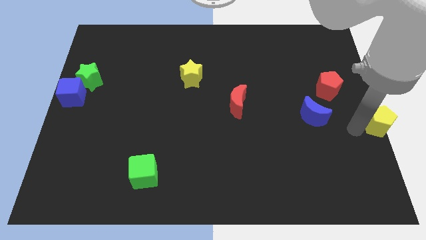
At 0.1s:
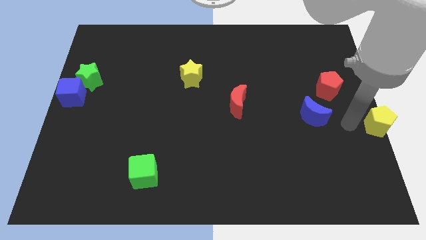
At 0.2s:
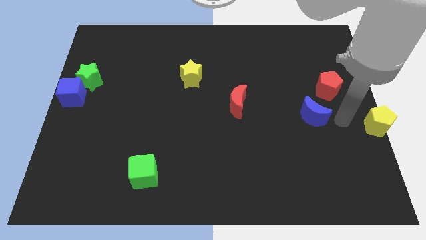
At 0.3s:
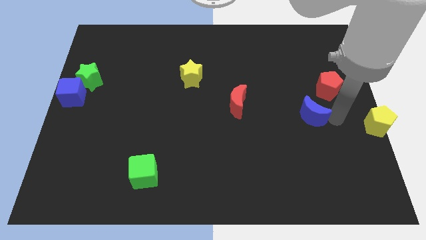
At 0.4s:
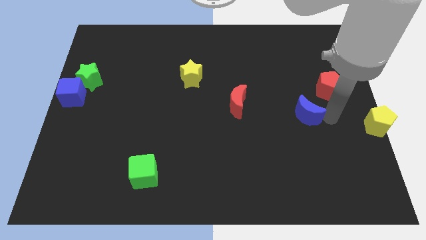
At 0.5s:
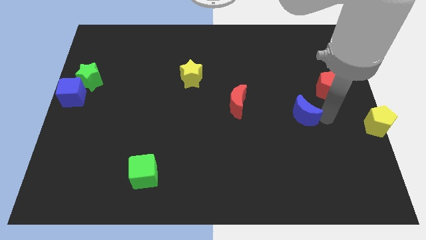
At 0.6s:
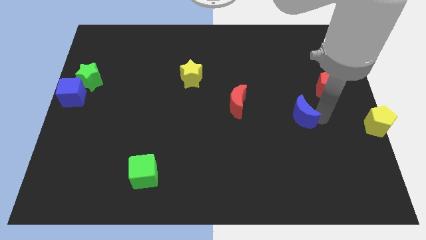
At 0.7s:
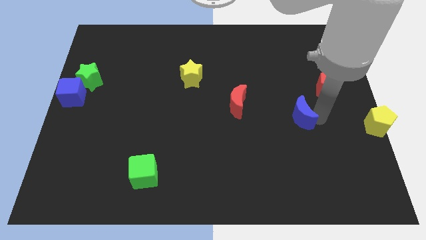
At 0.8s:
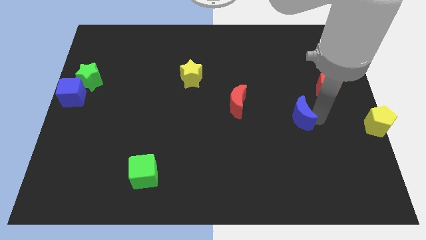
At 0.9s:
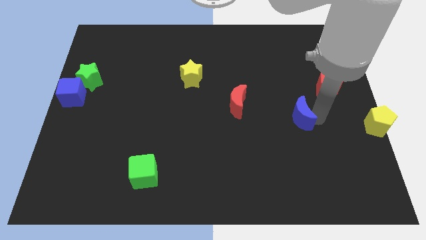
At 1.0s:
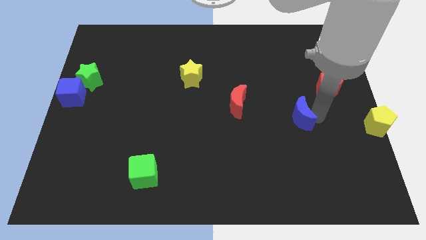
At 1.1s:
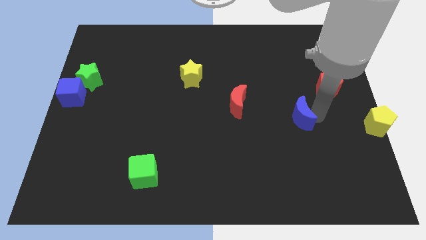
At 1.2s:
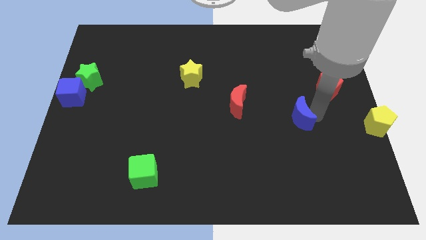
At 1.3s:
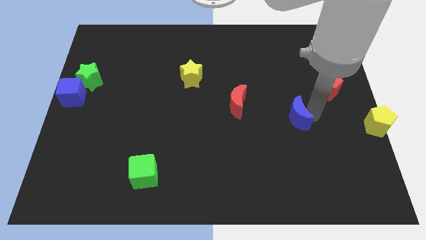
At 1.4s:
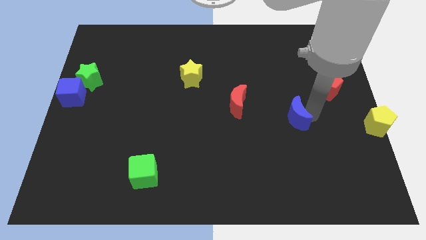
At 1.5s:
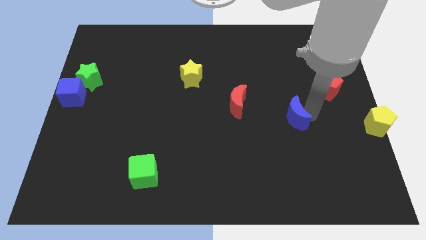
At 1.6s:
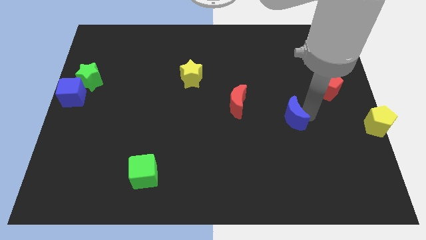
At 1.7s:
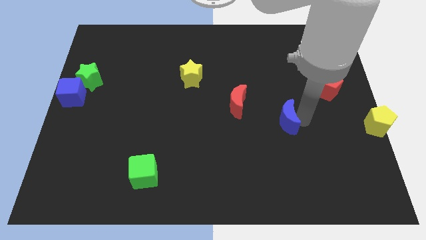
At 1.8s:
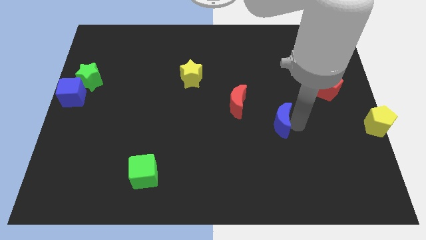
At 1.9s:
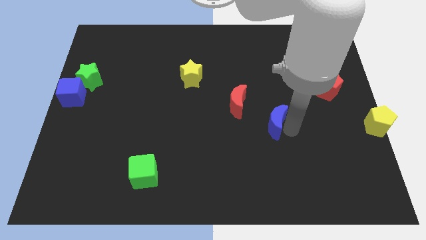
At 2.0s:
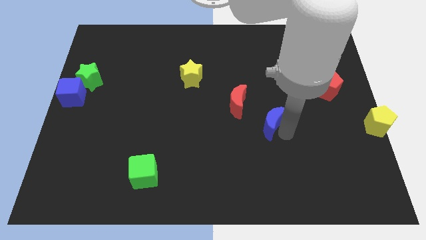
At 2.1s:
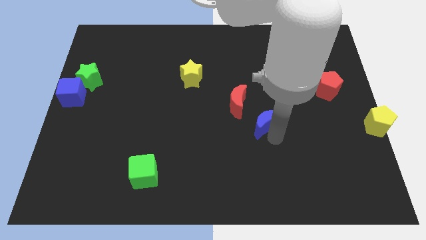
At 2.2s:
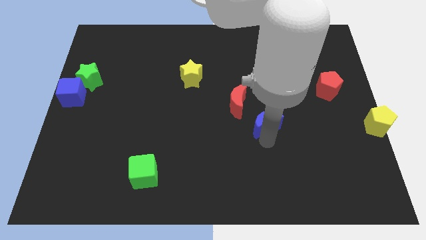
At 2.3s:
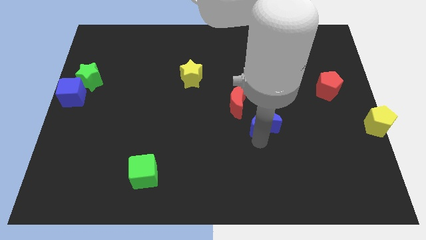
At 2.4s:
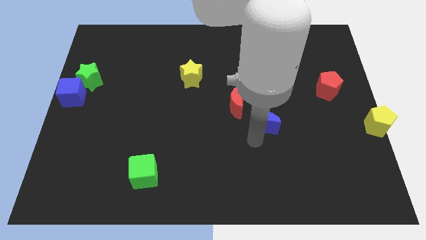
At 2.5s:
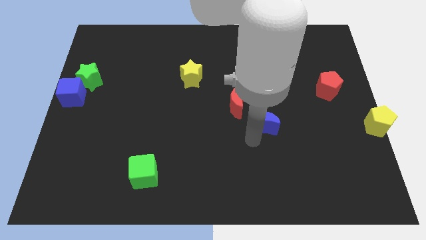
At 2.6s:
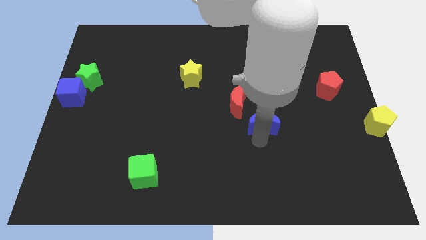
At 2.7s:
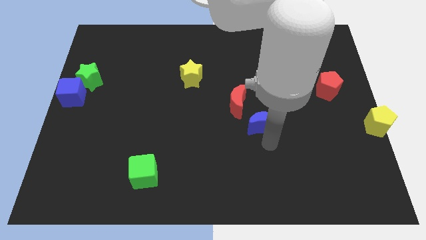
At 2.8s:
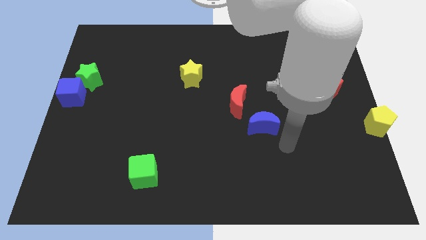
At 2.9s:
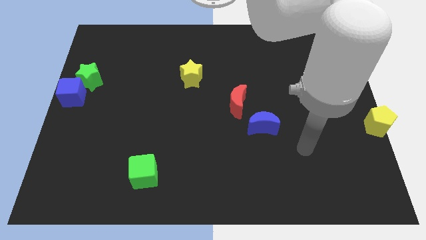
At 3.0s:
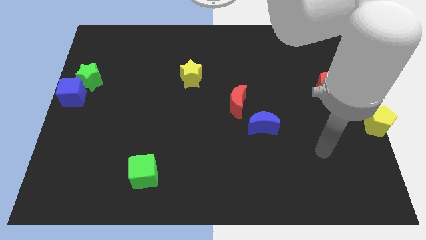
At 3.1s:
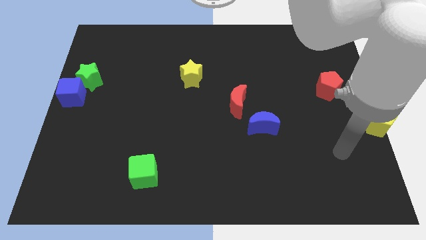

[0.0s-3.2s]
place the blue moon to the right side of the board

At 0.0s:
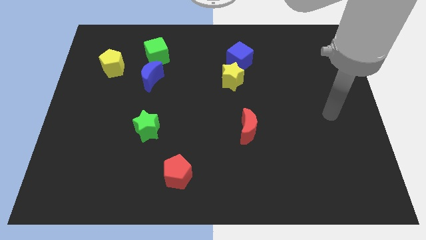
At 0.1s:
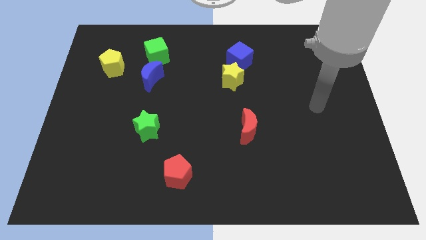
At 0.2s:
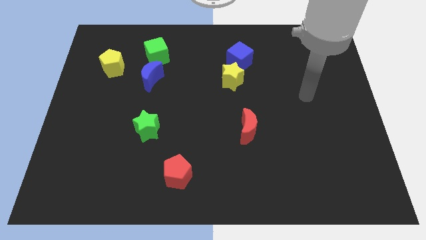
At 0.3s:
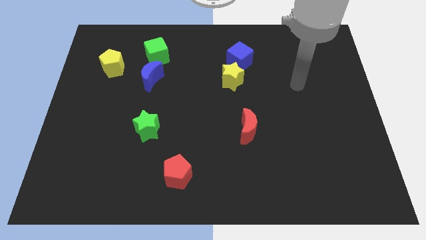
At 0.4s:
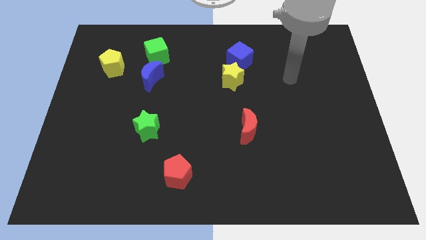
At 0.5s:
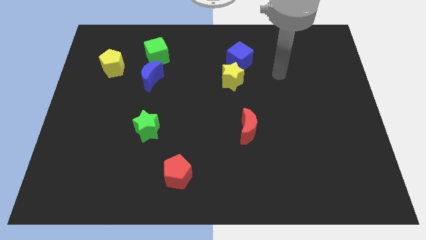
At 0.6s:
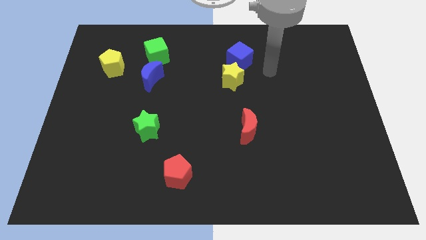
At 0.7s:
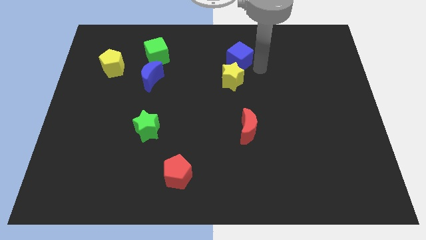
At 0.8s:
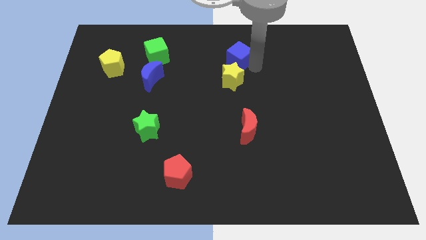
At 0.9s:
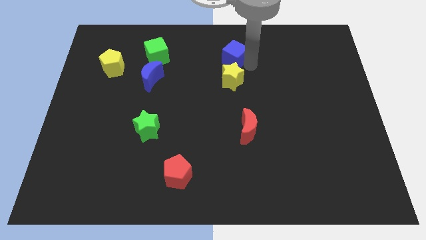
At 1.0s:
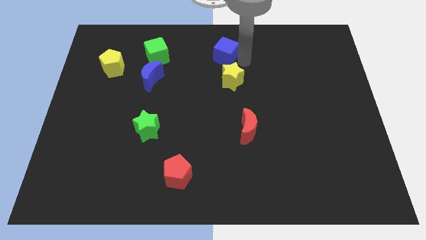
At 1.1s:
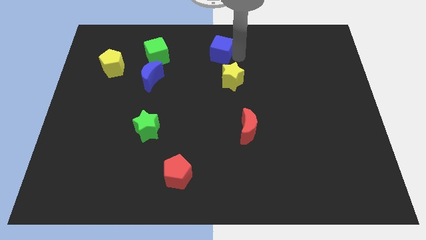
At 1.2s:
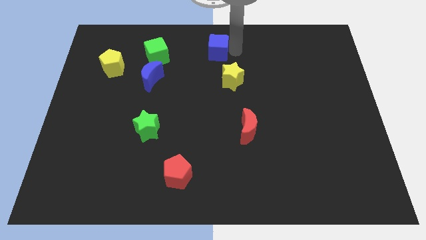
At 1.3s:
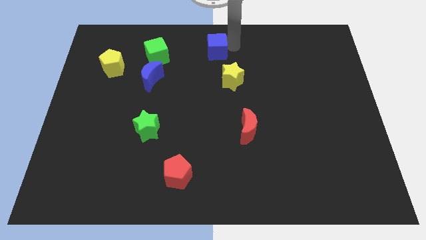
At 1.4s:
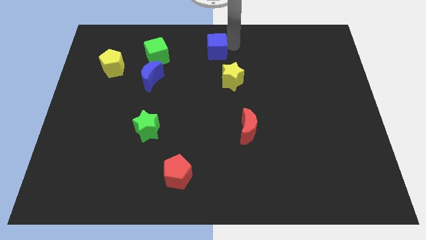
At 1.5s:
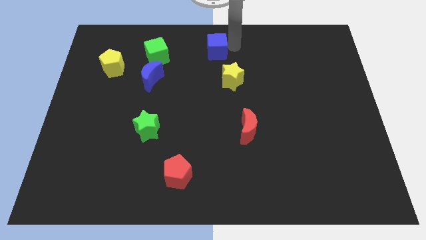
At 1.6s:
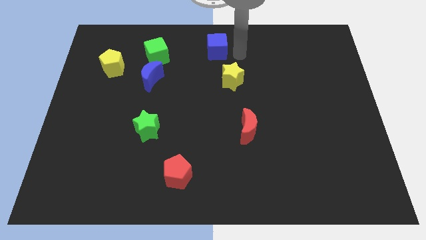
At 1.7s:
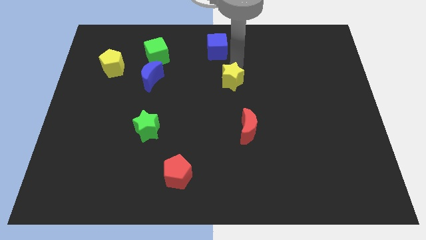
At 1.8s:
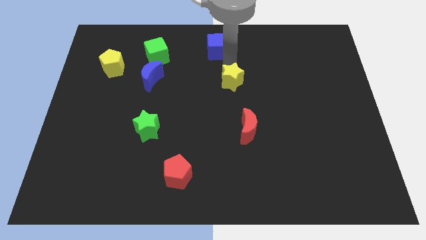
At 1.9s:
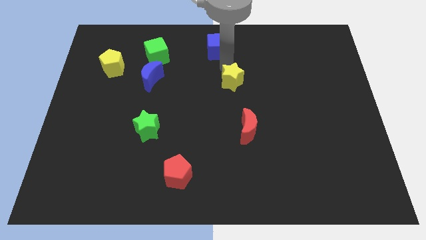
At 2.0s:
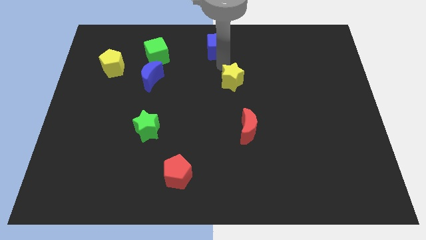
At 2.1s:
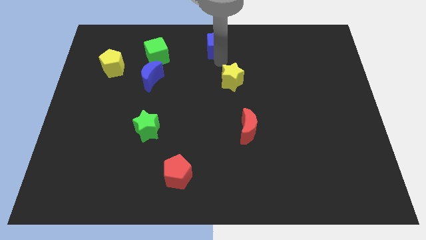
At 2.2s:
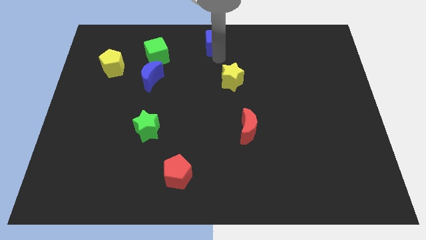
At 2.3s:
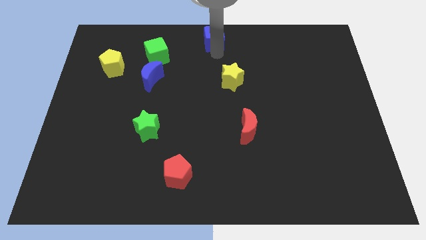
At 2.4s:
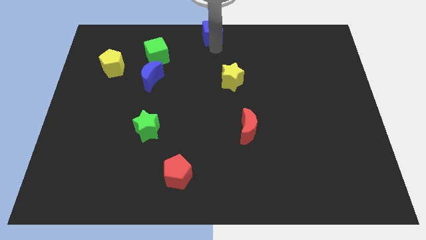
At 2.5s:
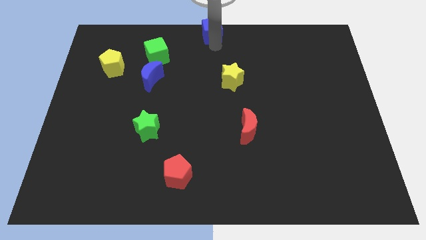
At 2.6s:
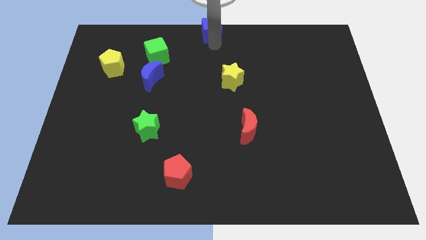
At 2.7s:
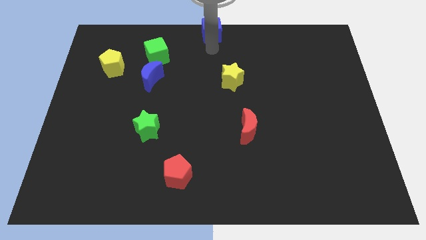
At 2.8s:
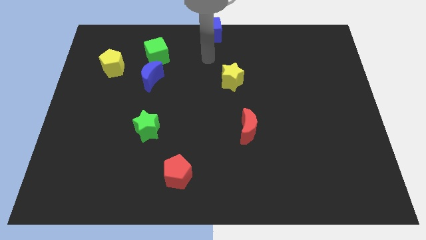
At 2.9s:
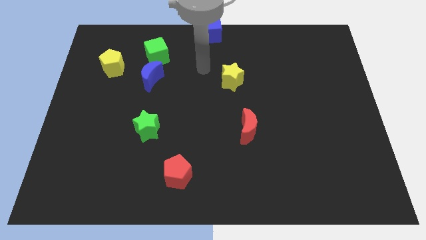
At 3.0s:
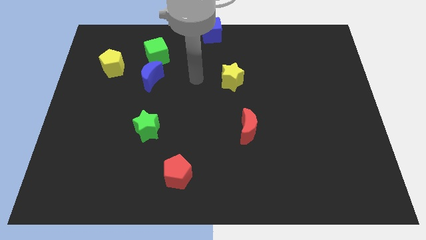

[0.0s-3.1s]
move the blue cube to the middle of the top side of the board

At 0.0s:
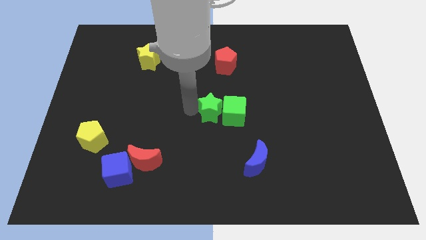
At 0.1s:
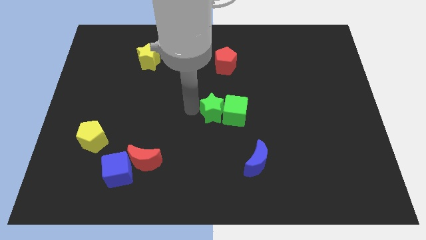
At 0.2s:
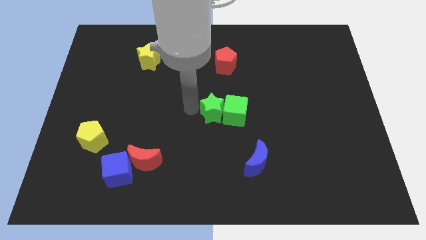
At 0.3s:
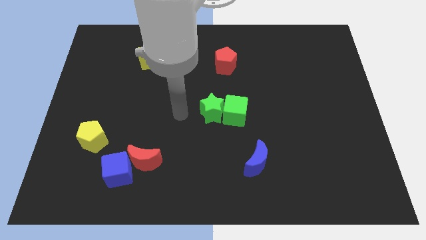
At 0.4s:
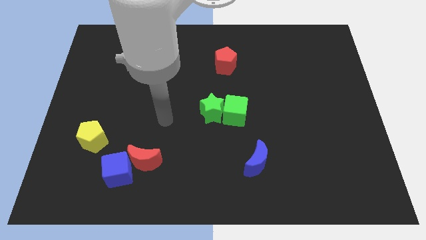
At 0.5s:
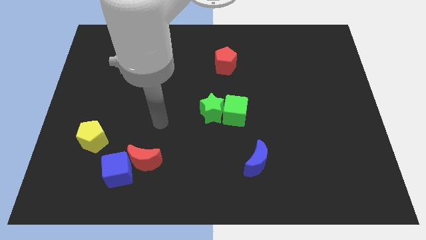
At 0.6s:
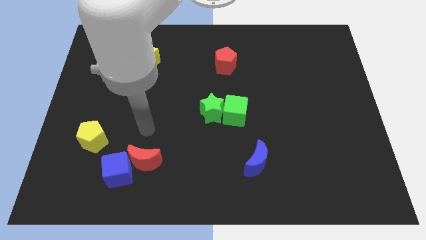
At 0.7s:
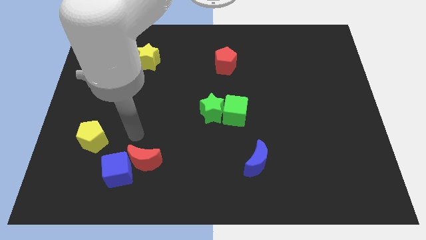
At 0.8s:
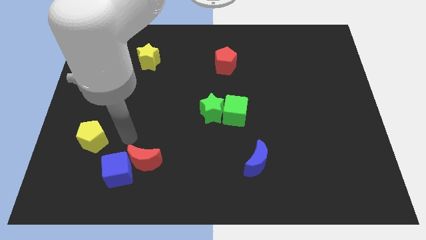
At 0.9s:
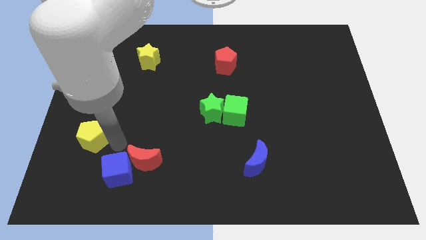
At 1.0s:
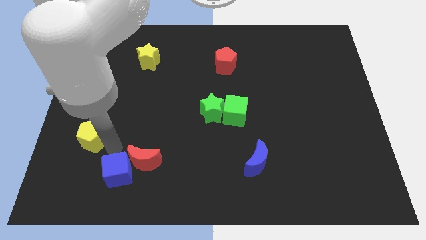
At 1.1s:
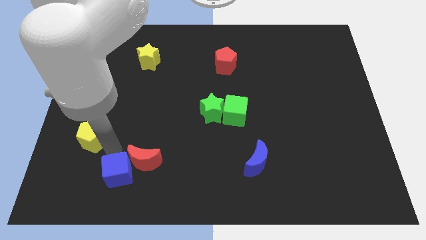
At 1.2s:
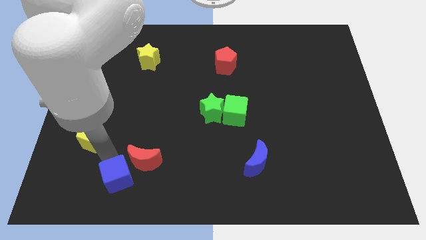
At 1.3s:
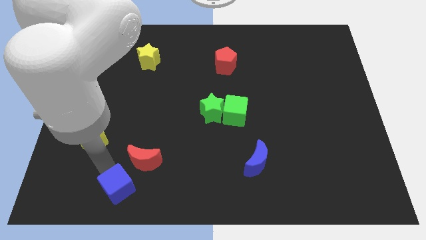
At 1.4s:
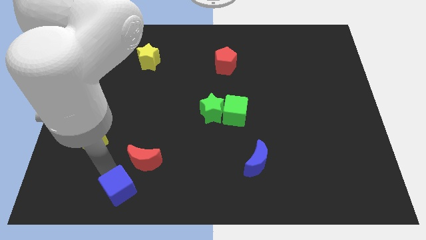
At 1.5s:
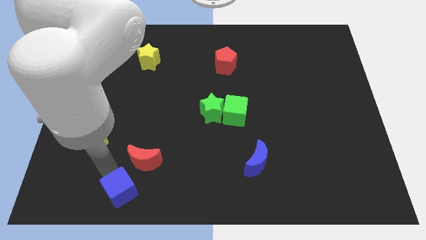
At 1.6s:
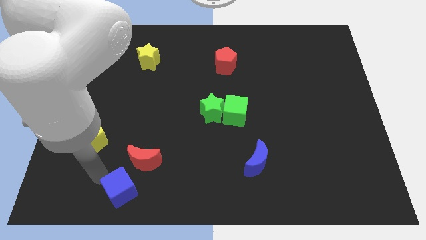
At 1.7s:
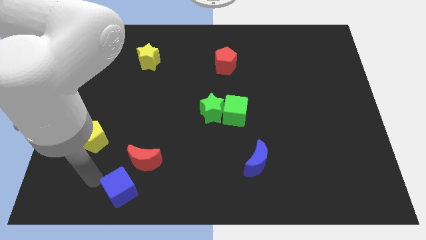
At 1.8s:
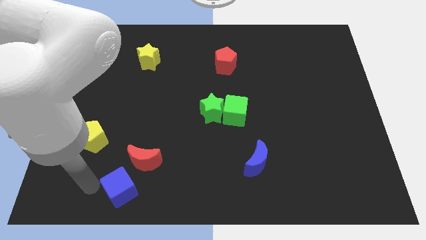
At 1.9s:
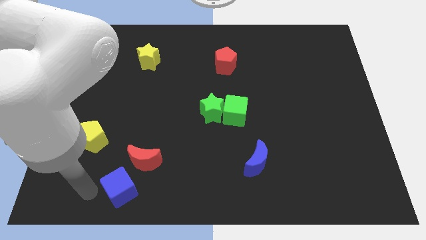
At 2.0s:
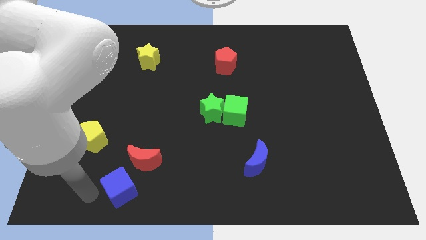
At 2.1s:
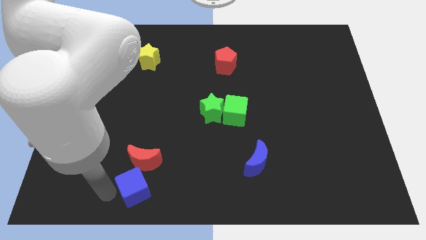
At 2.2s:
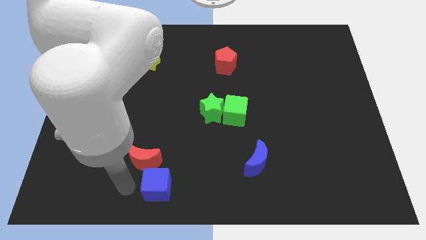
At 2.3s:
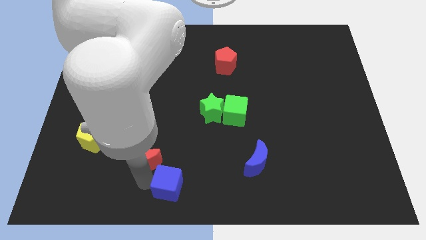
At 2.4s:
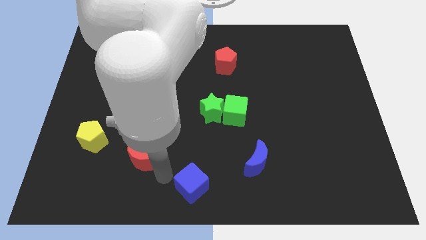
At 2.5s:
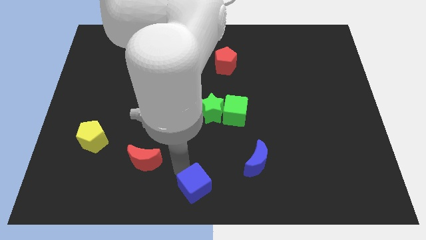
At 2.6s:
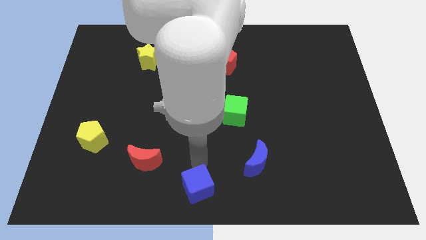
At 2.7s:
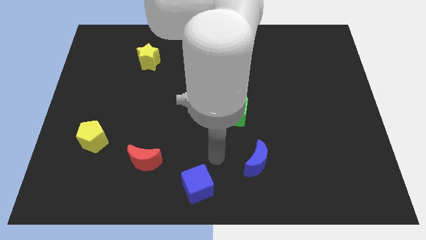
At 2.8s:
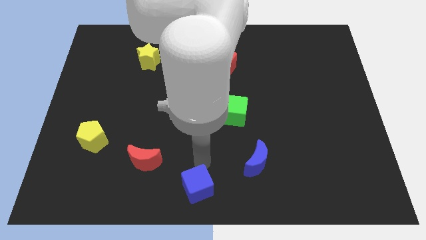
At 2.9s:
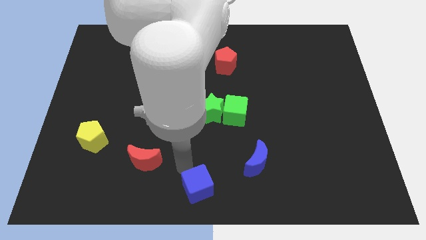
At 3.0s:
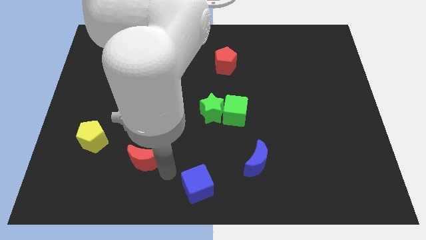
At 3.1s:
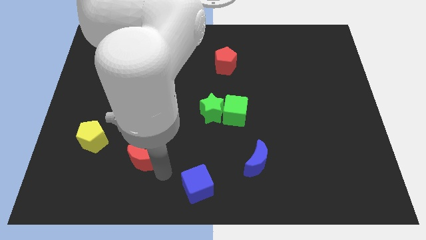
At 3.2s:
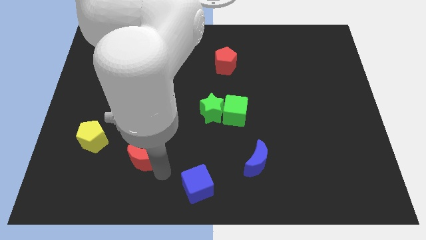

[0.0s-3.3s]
push the blue cube to the left of blue moon
